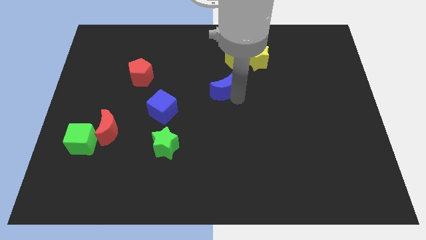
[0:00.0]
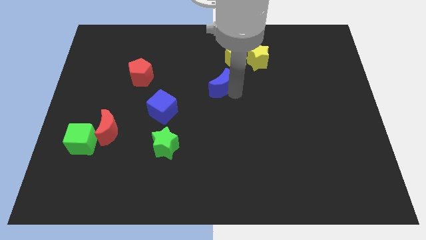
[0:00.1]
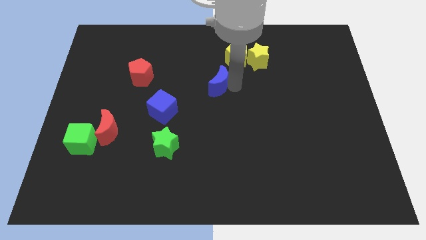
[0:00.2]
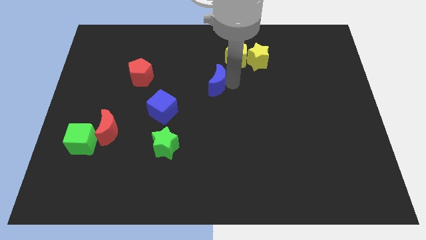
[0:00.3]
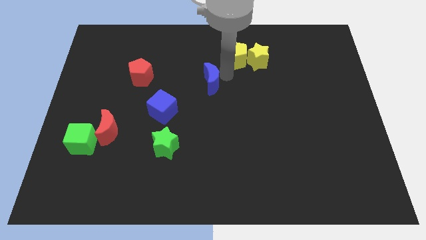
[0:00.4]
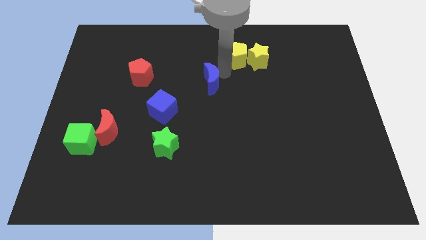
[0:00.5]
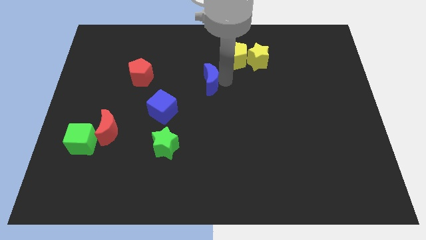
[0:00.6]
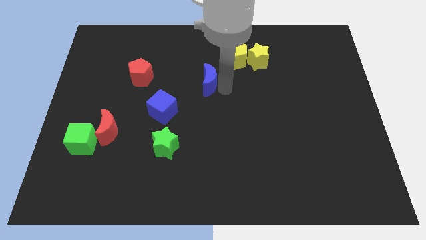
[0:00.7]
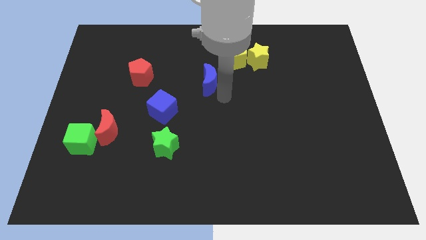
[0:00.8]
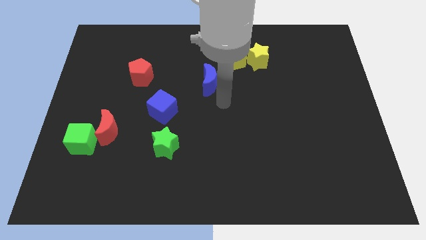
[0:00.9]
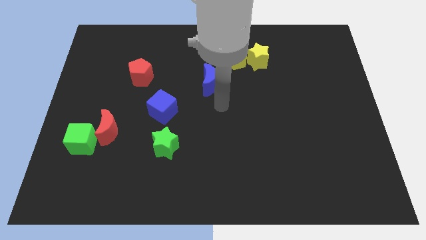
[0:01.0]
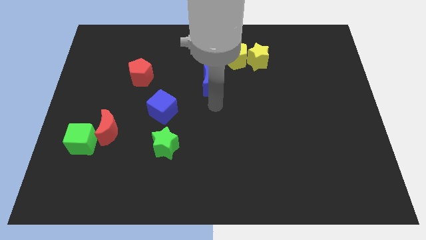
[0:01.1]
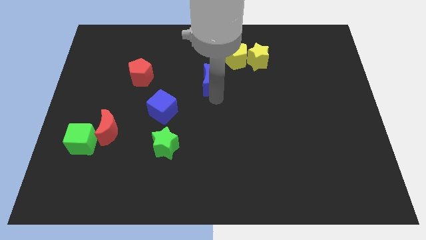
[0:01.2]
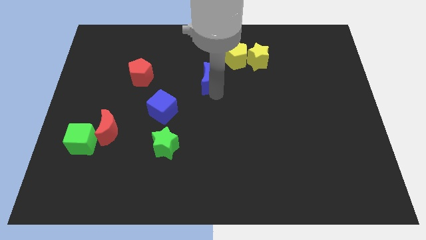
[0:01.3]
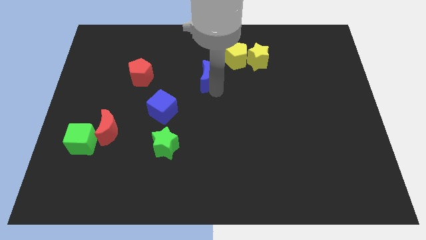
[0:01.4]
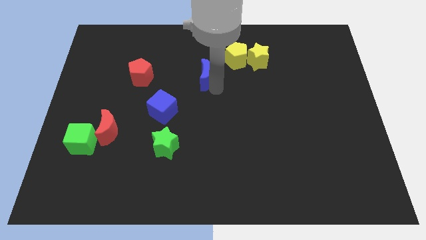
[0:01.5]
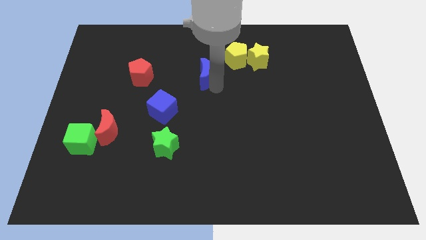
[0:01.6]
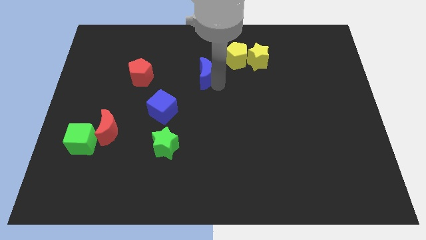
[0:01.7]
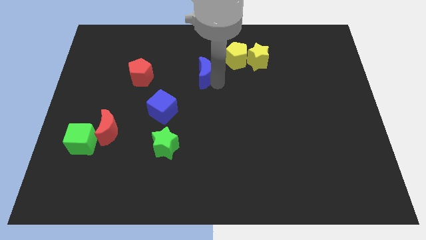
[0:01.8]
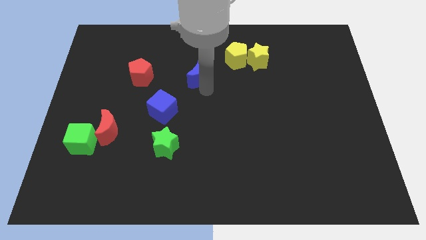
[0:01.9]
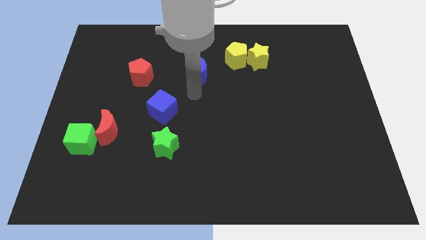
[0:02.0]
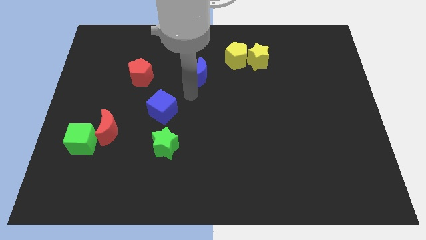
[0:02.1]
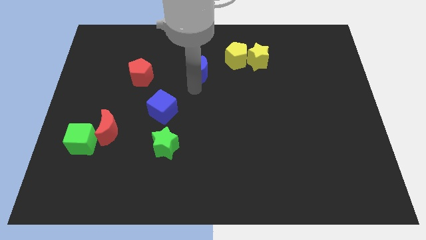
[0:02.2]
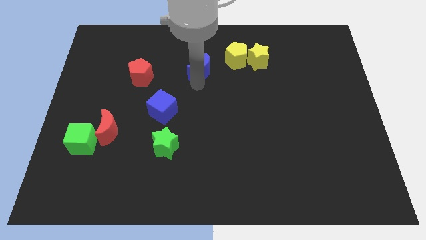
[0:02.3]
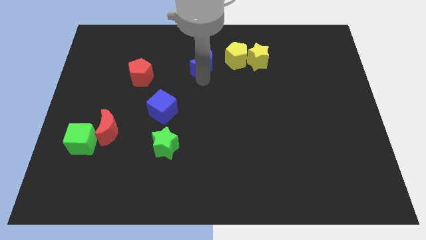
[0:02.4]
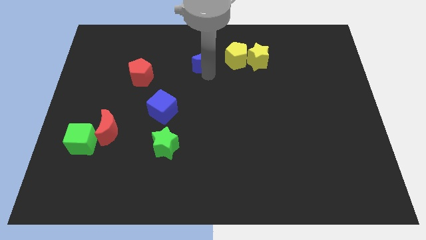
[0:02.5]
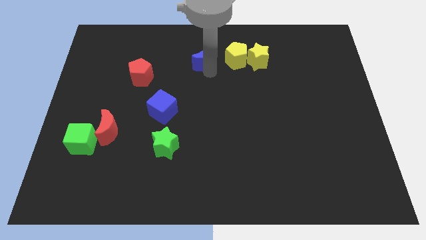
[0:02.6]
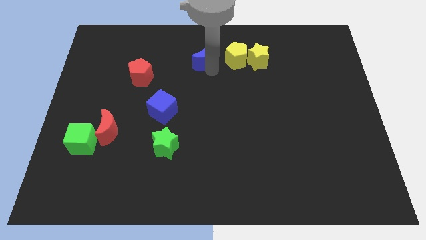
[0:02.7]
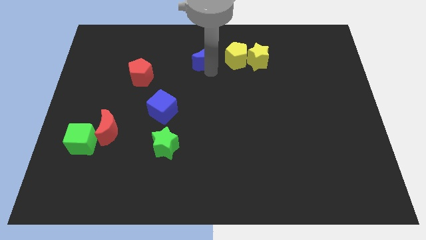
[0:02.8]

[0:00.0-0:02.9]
push the blue moon upward

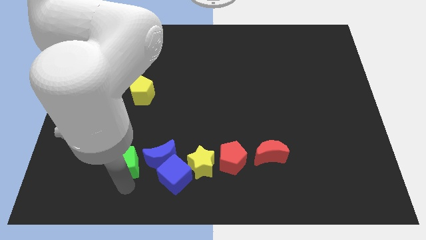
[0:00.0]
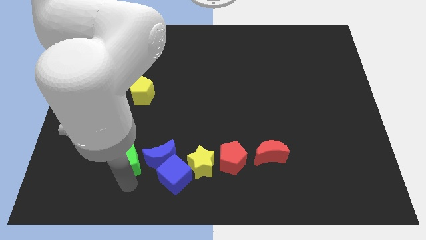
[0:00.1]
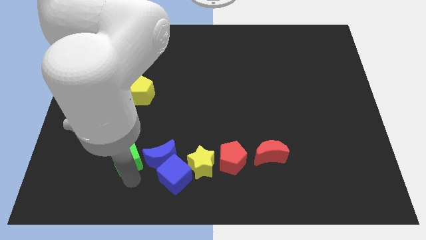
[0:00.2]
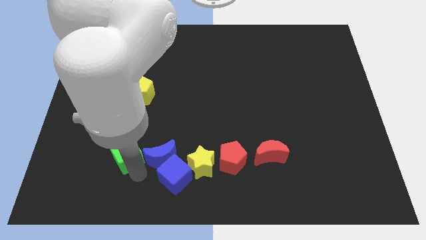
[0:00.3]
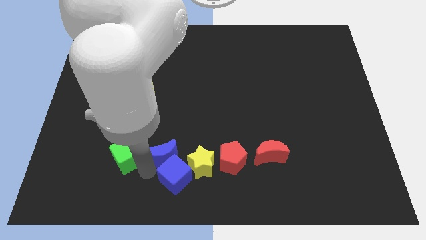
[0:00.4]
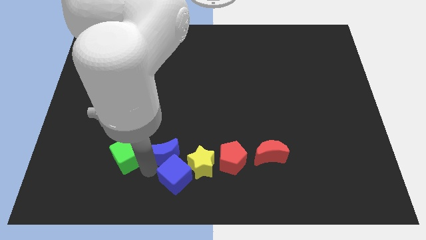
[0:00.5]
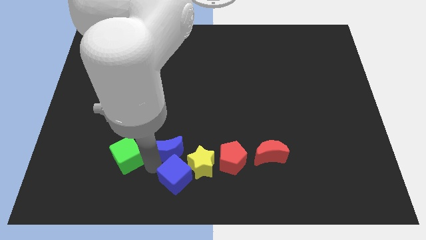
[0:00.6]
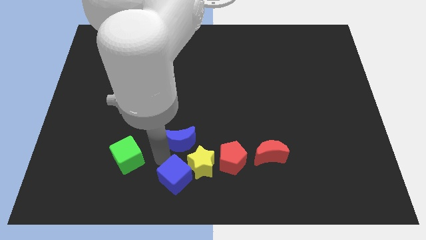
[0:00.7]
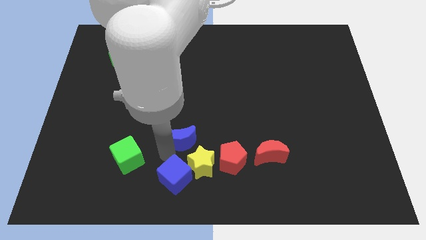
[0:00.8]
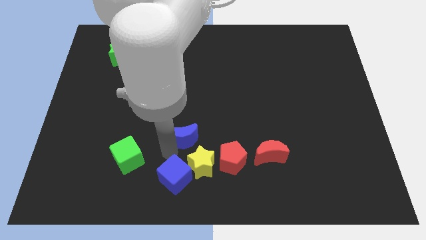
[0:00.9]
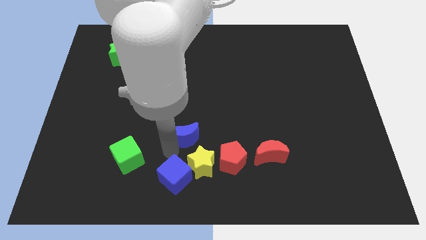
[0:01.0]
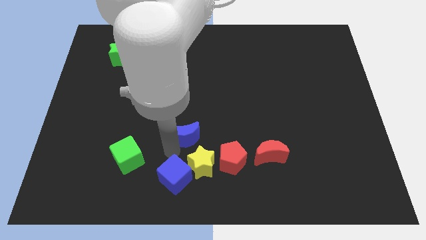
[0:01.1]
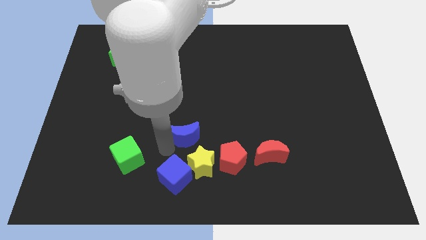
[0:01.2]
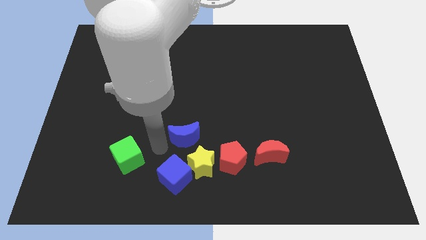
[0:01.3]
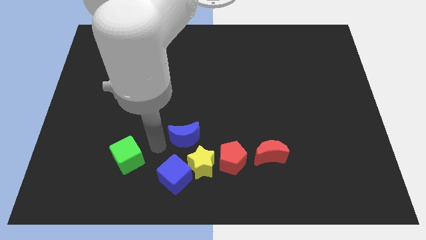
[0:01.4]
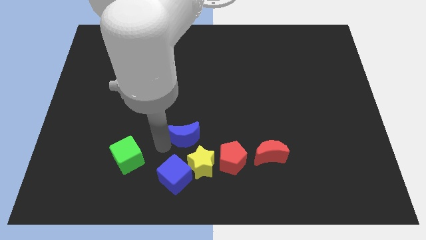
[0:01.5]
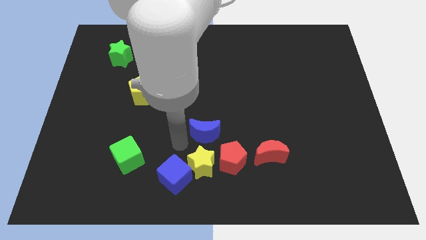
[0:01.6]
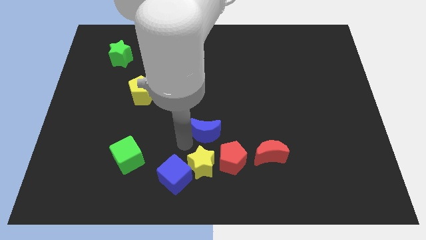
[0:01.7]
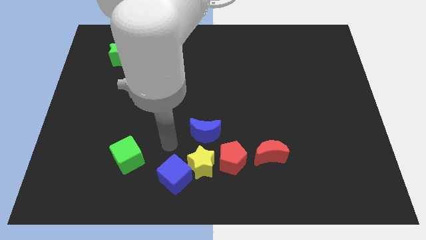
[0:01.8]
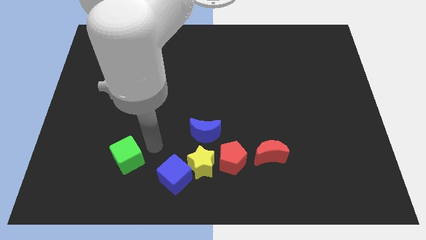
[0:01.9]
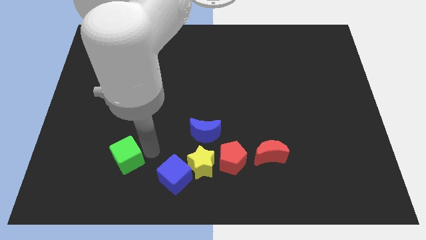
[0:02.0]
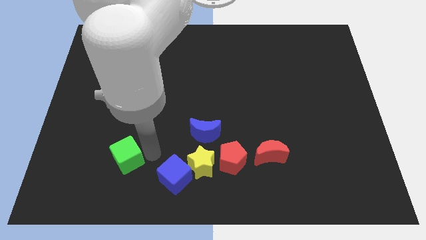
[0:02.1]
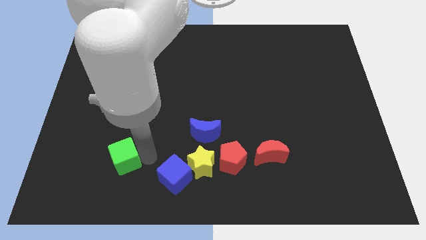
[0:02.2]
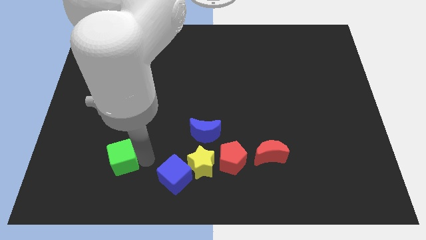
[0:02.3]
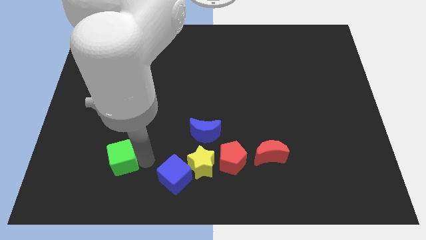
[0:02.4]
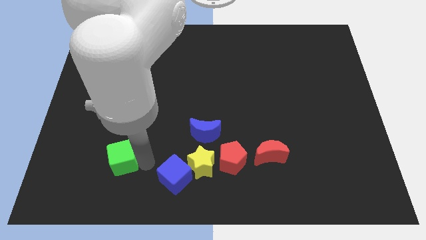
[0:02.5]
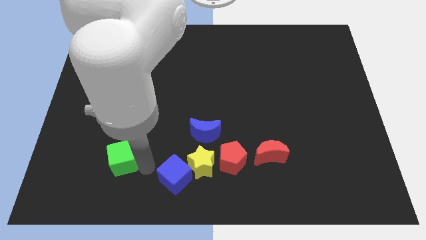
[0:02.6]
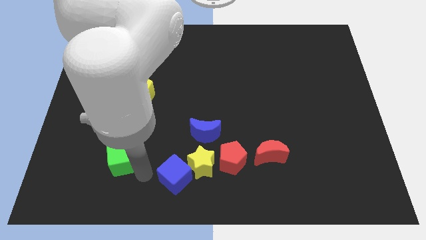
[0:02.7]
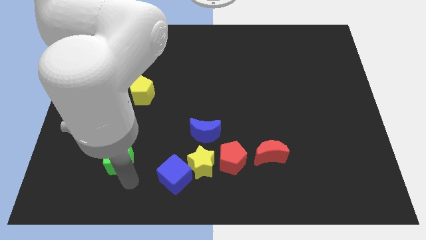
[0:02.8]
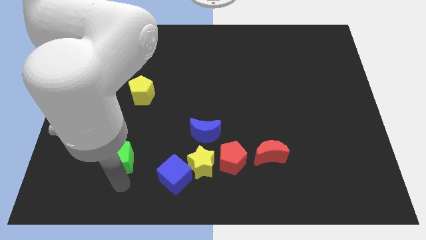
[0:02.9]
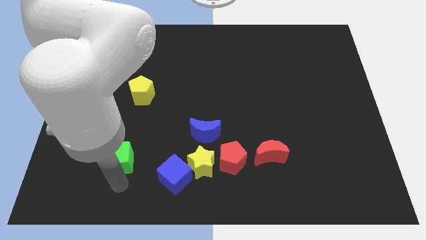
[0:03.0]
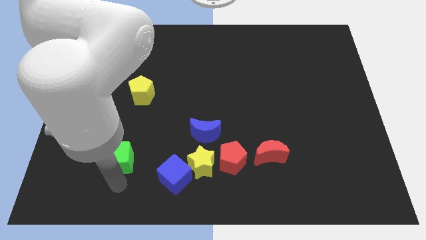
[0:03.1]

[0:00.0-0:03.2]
place blue moon above yellow star

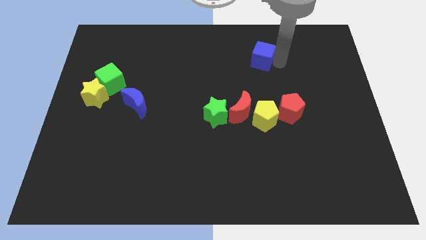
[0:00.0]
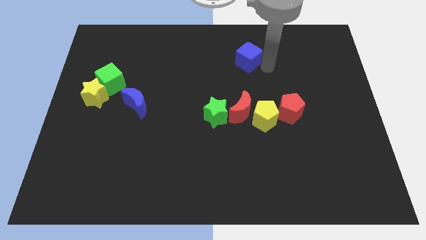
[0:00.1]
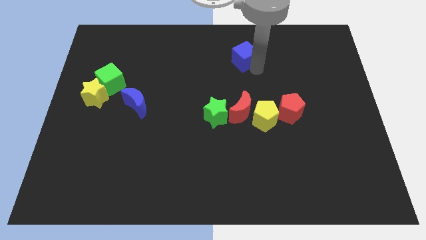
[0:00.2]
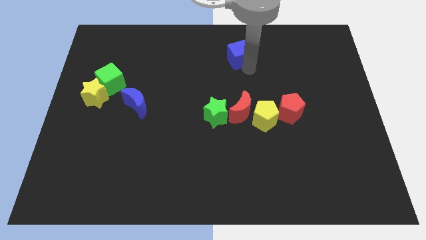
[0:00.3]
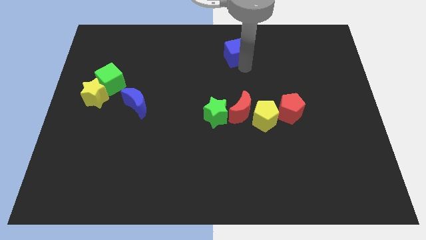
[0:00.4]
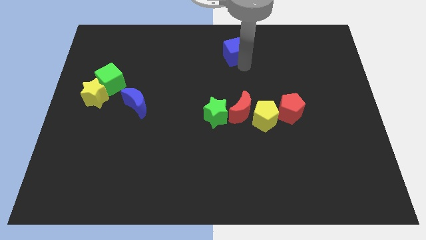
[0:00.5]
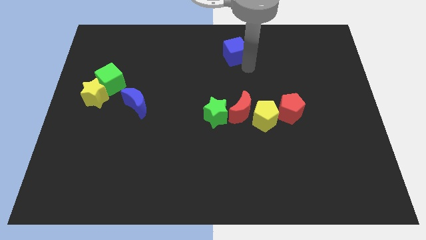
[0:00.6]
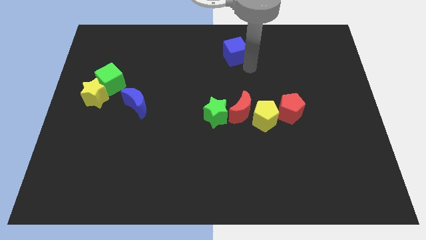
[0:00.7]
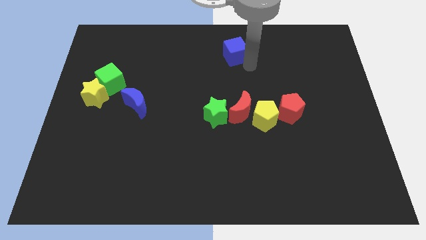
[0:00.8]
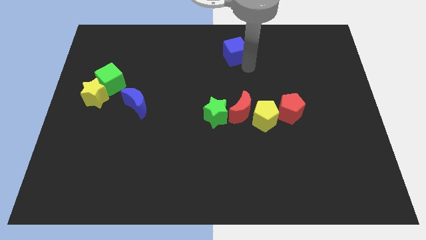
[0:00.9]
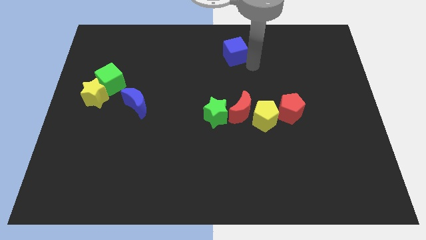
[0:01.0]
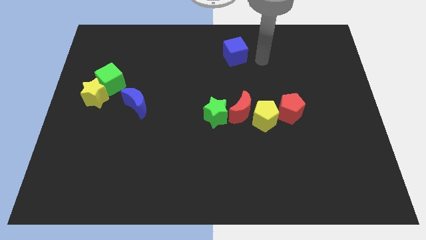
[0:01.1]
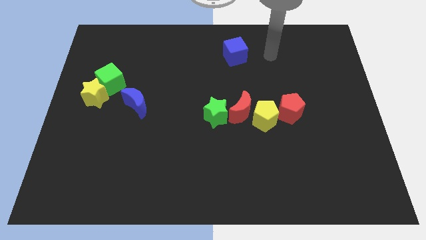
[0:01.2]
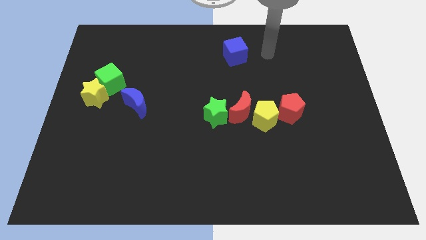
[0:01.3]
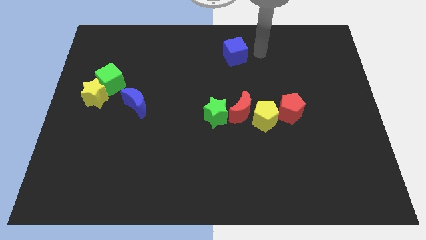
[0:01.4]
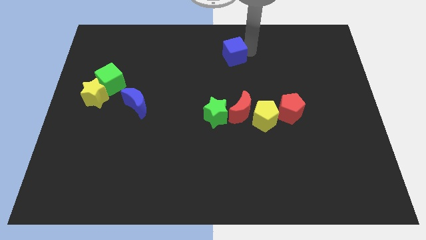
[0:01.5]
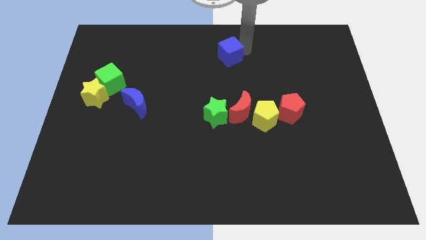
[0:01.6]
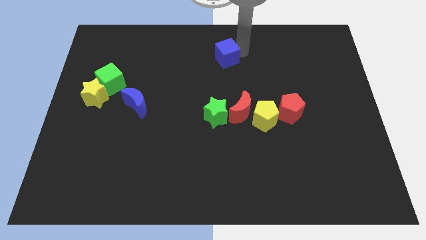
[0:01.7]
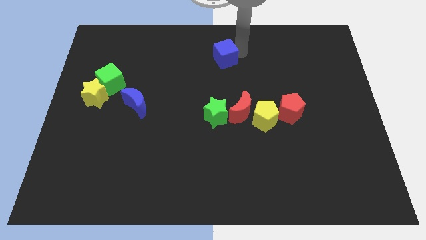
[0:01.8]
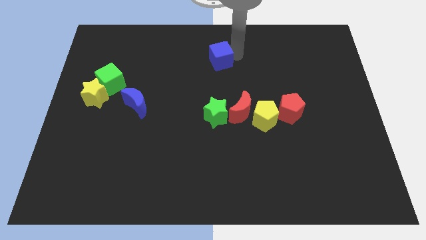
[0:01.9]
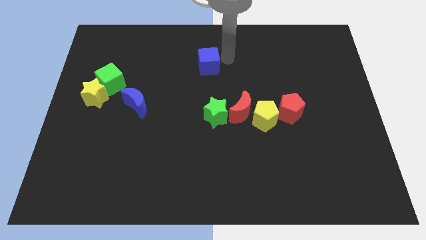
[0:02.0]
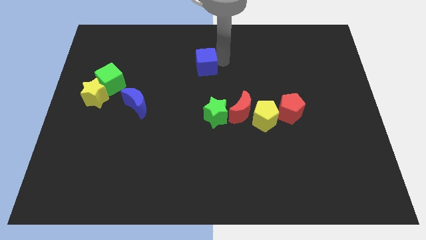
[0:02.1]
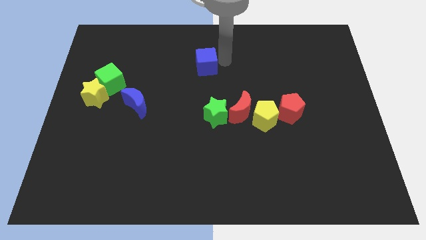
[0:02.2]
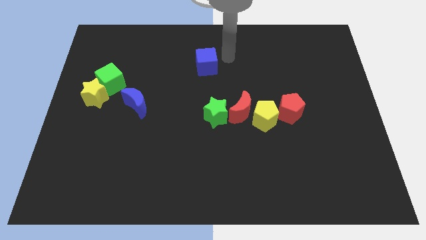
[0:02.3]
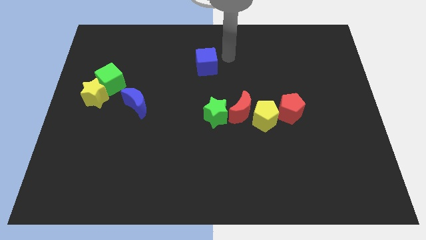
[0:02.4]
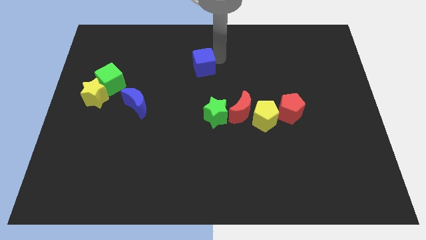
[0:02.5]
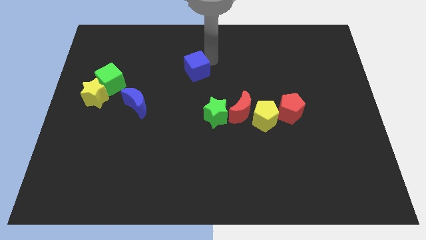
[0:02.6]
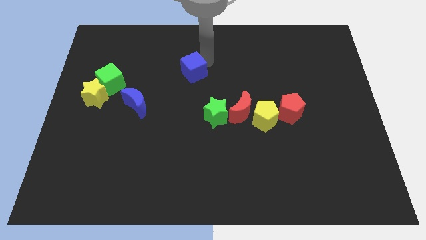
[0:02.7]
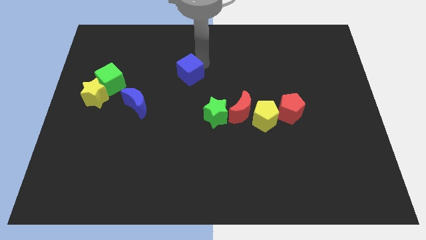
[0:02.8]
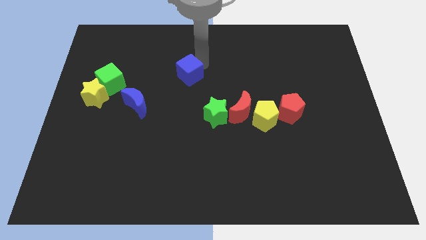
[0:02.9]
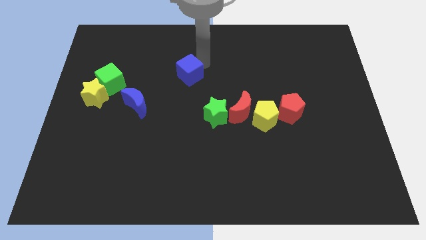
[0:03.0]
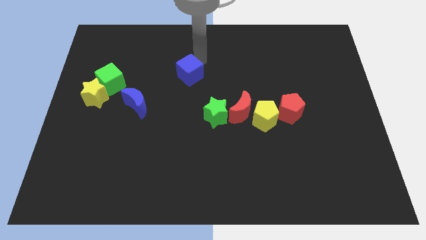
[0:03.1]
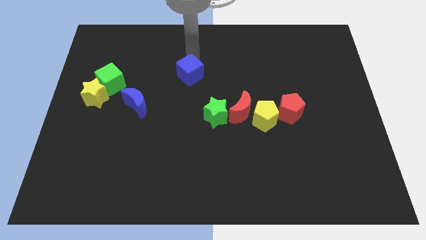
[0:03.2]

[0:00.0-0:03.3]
place the blue cube diagonally to the left of the green star
